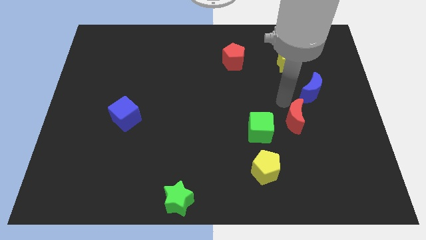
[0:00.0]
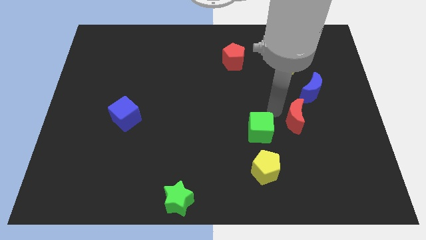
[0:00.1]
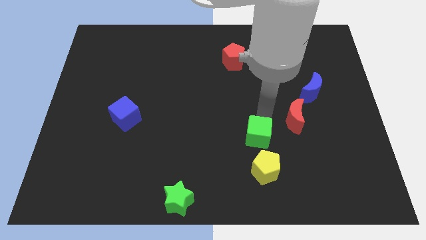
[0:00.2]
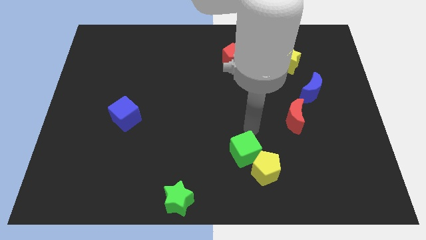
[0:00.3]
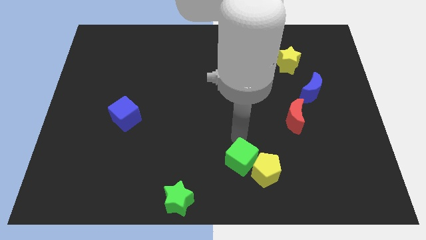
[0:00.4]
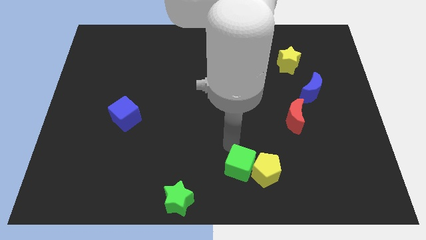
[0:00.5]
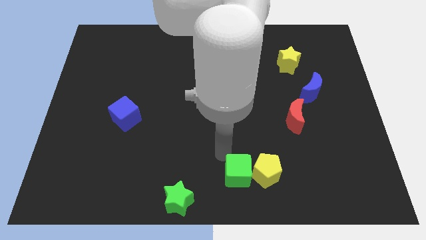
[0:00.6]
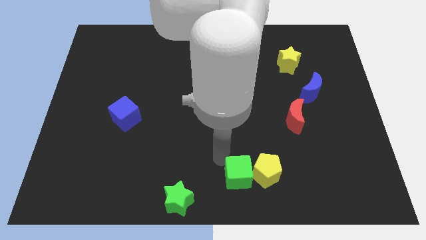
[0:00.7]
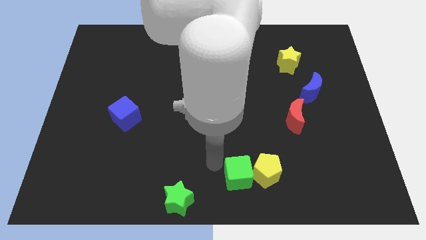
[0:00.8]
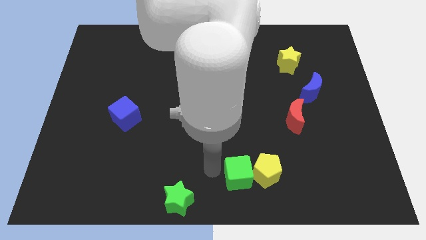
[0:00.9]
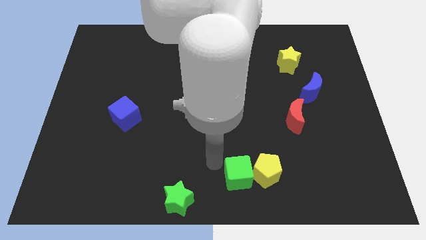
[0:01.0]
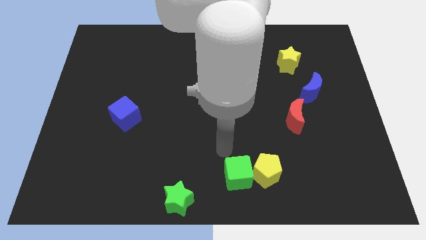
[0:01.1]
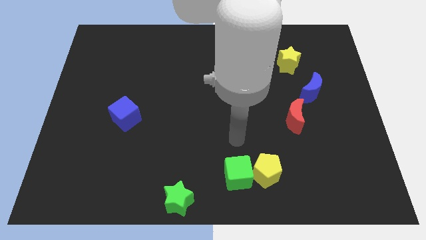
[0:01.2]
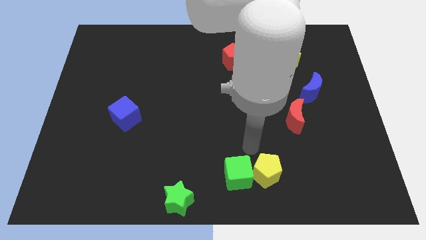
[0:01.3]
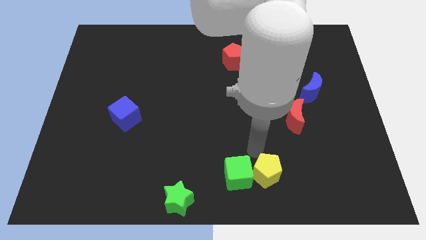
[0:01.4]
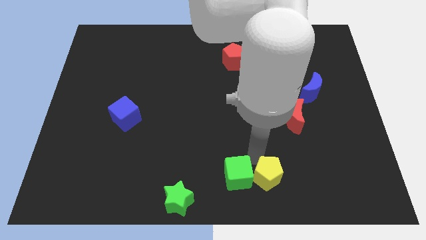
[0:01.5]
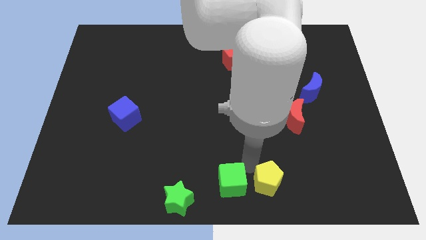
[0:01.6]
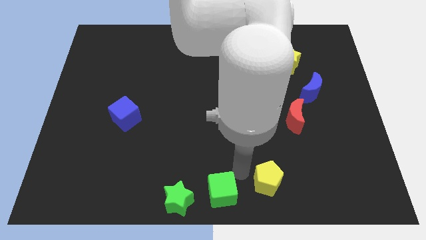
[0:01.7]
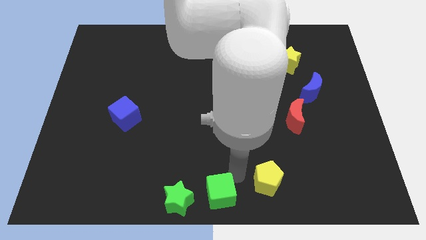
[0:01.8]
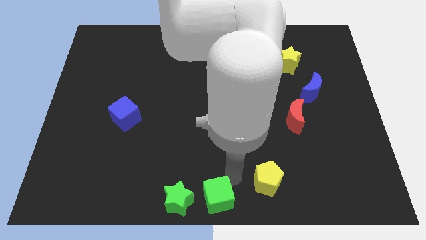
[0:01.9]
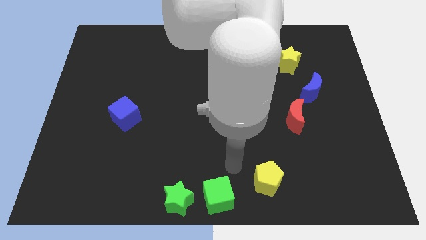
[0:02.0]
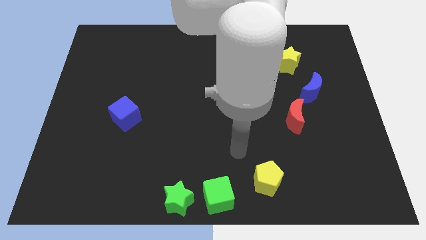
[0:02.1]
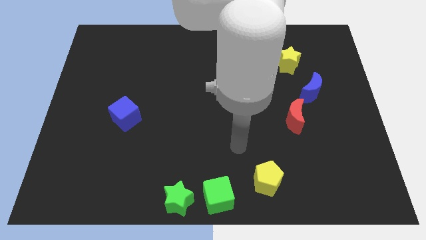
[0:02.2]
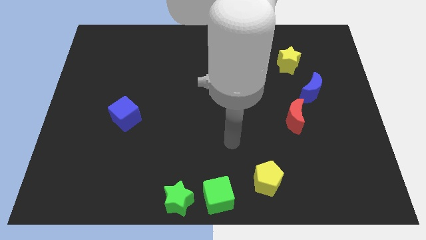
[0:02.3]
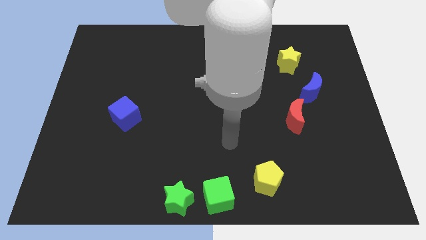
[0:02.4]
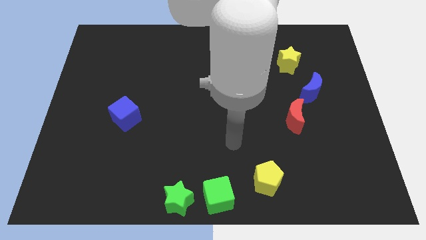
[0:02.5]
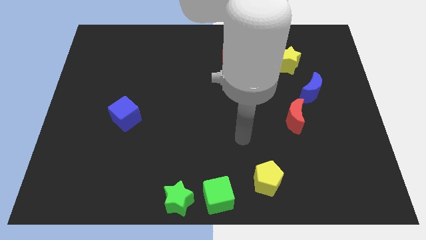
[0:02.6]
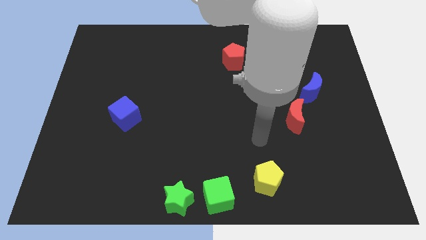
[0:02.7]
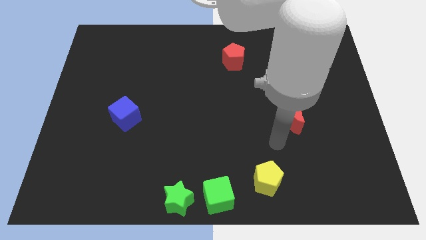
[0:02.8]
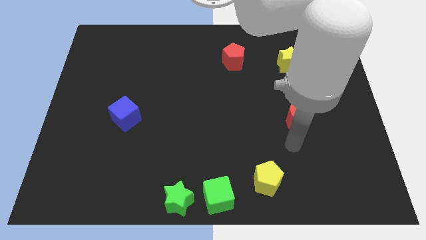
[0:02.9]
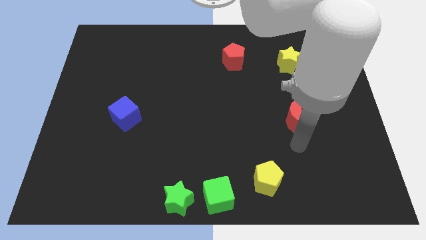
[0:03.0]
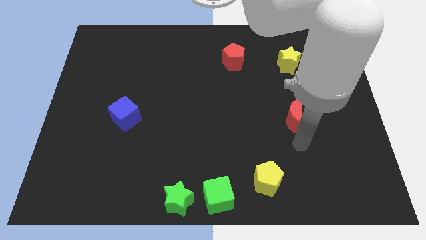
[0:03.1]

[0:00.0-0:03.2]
place the green cube to the right of the green star

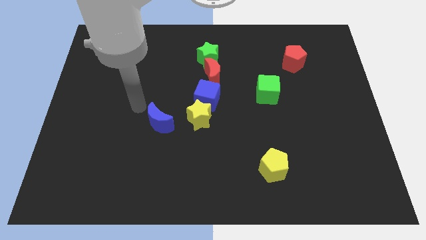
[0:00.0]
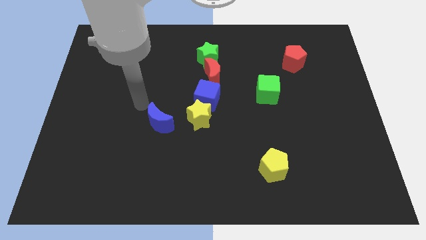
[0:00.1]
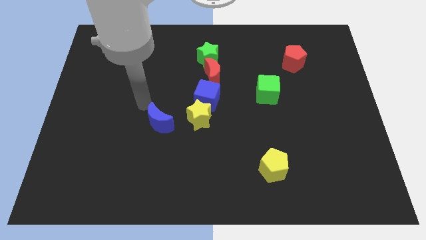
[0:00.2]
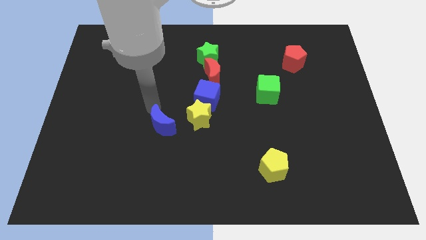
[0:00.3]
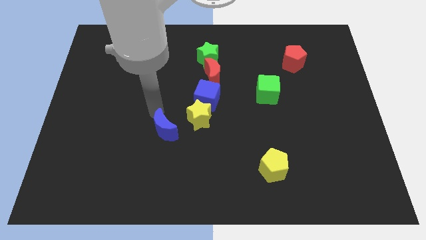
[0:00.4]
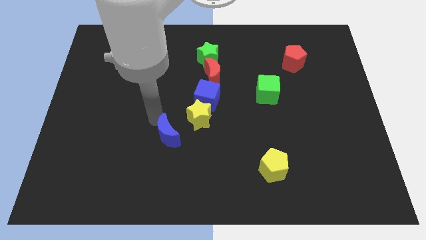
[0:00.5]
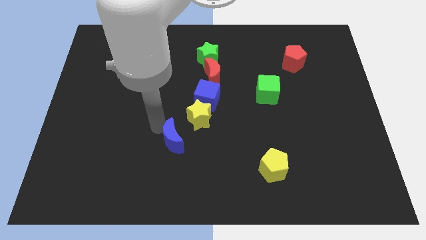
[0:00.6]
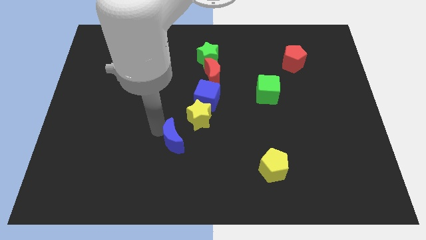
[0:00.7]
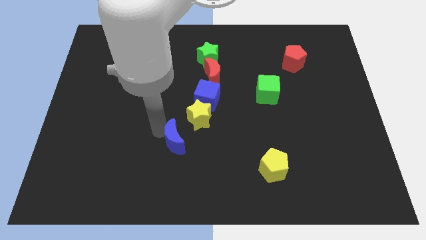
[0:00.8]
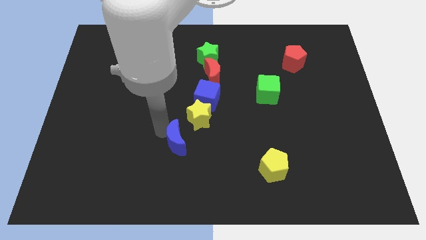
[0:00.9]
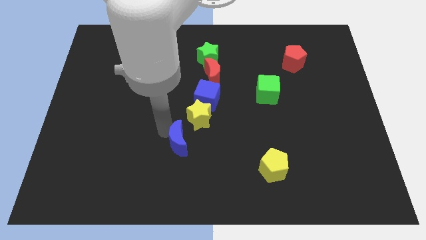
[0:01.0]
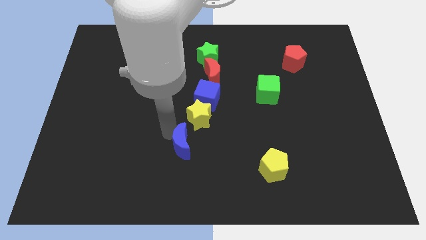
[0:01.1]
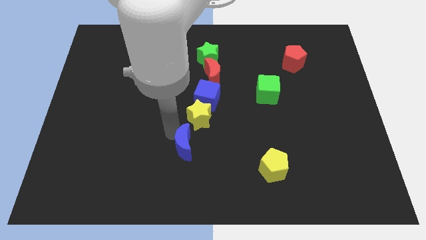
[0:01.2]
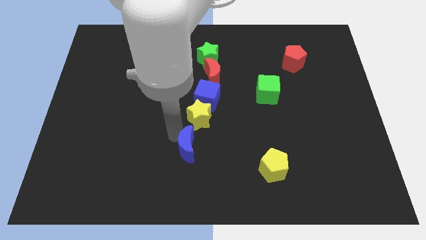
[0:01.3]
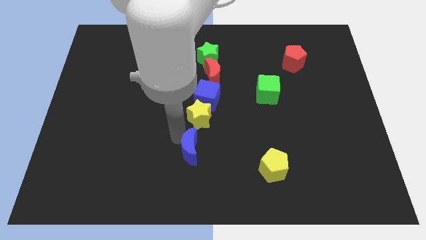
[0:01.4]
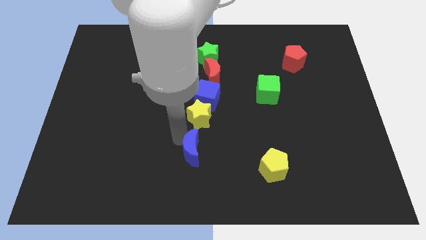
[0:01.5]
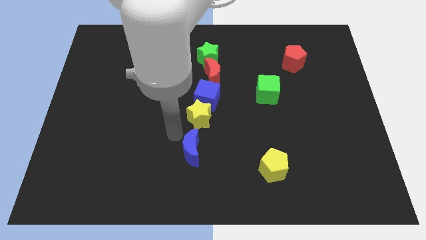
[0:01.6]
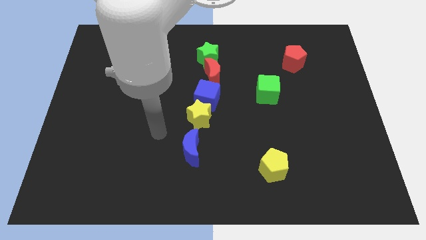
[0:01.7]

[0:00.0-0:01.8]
move the blue moon below the yellow star

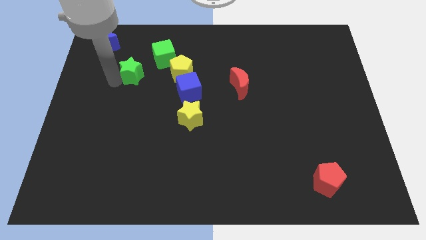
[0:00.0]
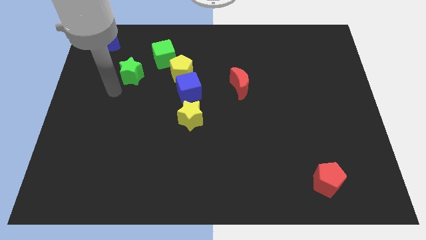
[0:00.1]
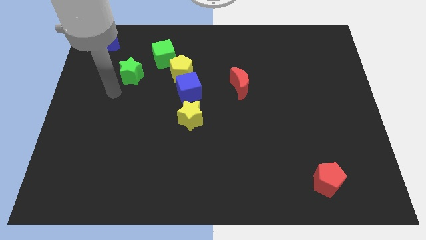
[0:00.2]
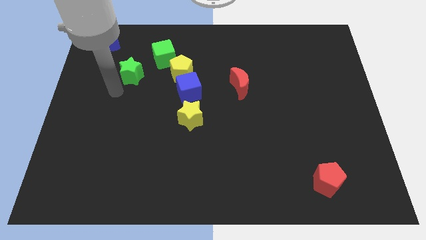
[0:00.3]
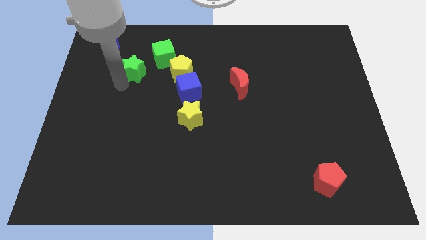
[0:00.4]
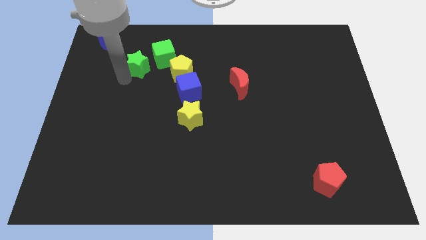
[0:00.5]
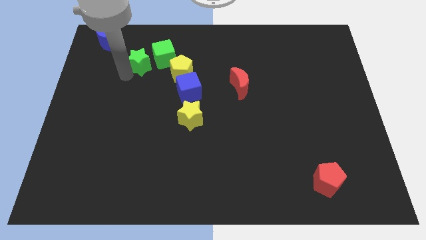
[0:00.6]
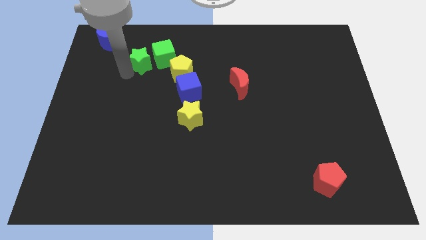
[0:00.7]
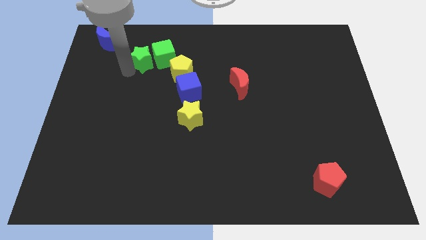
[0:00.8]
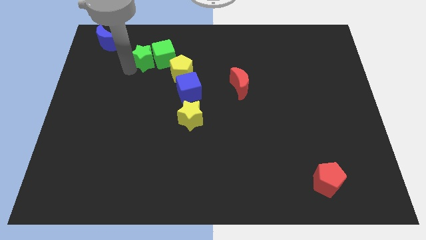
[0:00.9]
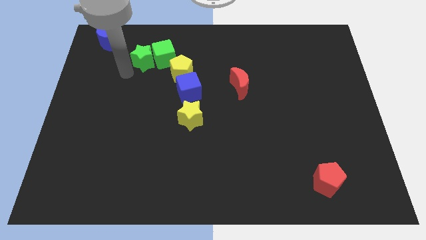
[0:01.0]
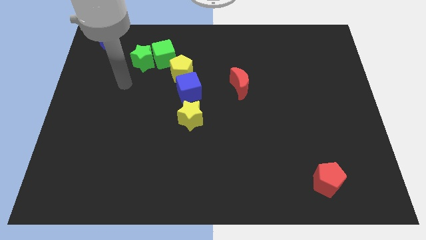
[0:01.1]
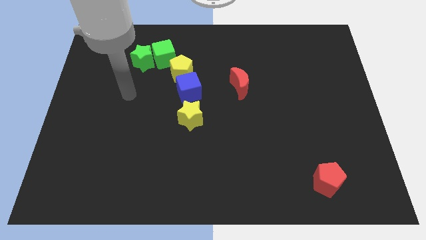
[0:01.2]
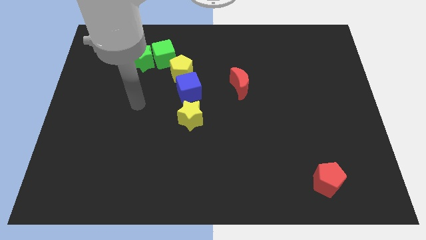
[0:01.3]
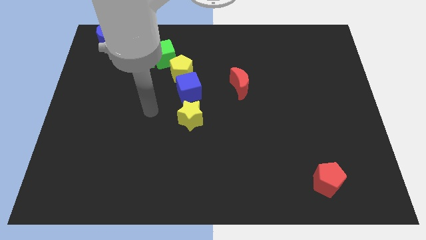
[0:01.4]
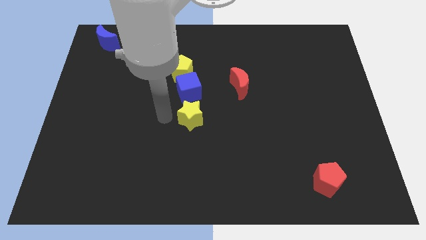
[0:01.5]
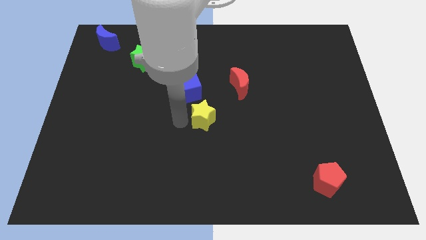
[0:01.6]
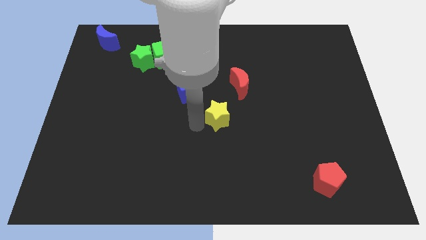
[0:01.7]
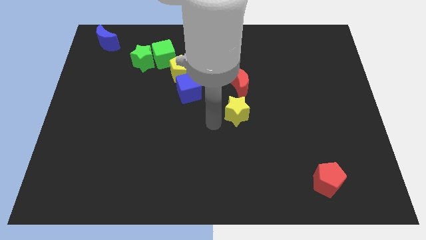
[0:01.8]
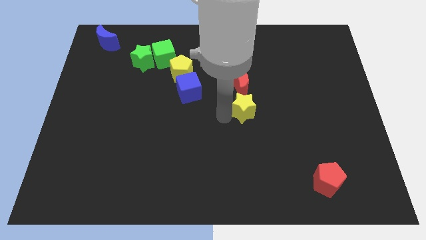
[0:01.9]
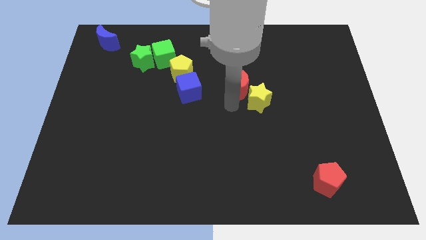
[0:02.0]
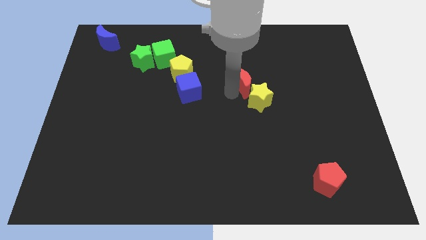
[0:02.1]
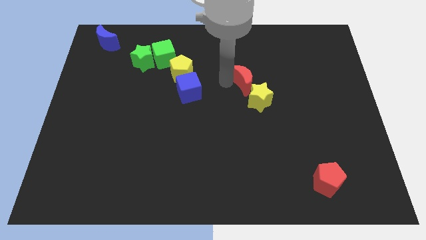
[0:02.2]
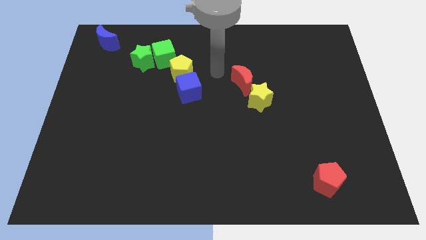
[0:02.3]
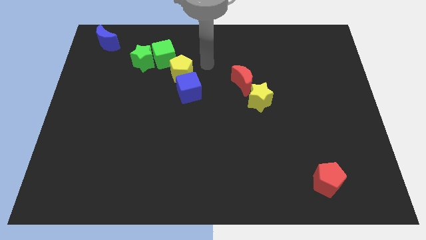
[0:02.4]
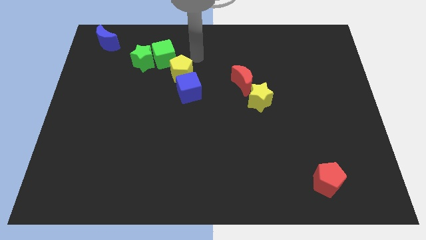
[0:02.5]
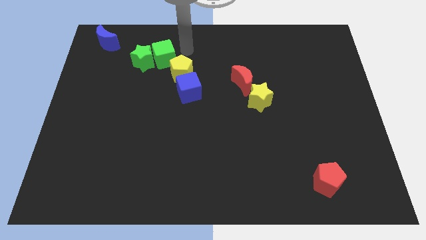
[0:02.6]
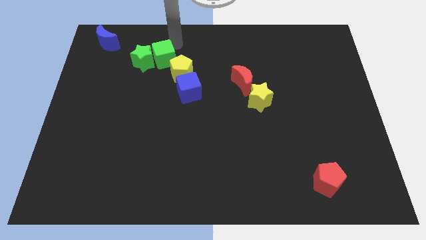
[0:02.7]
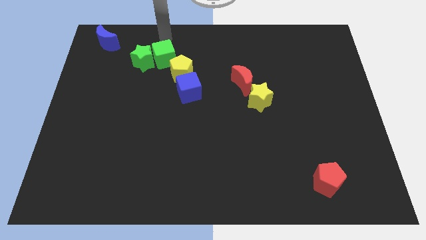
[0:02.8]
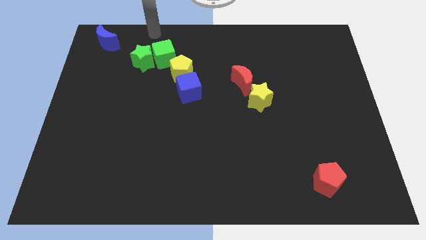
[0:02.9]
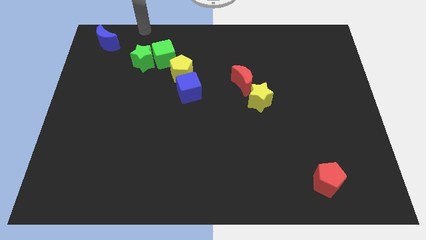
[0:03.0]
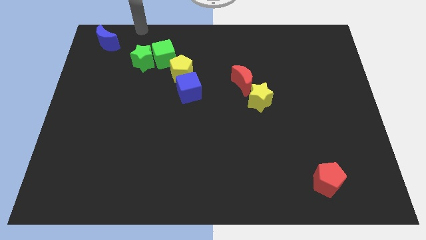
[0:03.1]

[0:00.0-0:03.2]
separate yellow star from blue cube

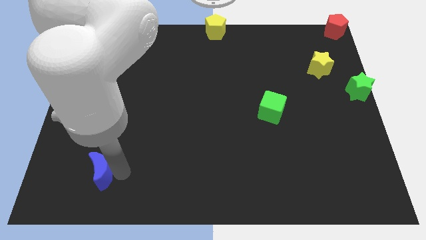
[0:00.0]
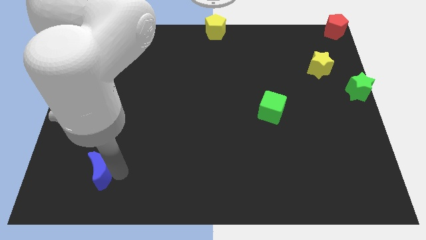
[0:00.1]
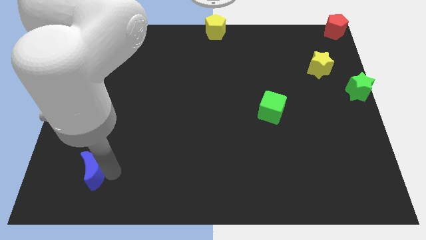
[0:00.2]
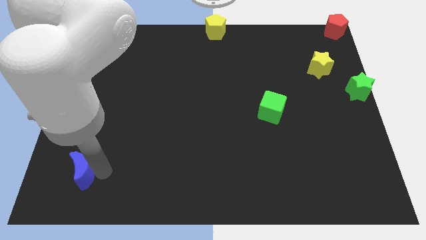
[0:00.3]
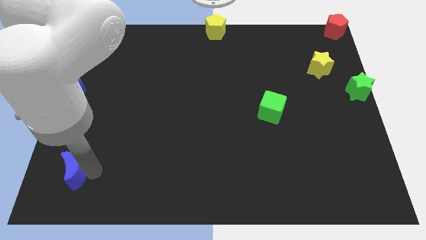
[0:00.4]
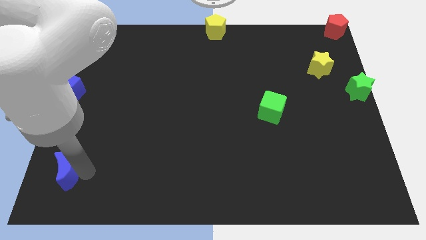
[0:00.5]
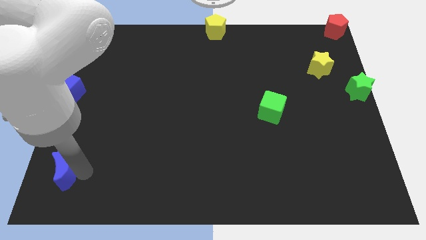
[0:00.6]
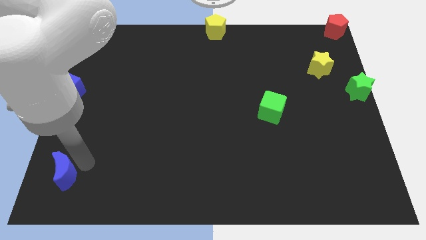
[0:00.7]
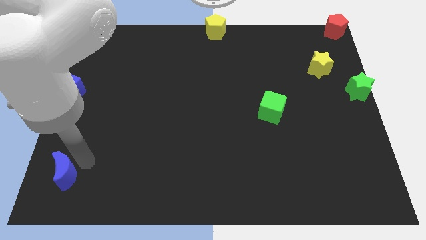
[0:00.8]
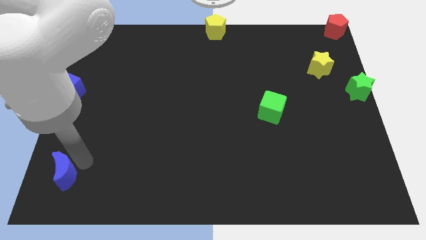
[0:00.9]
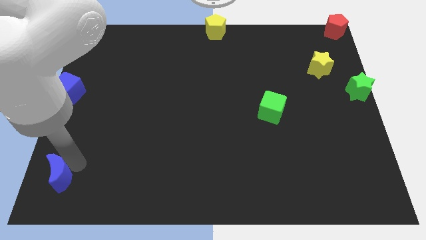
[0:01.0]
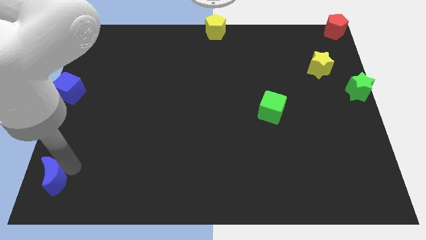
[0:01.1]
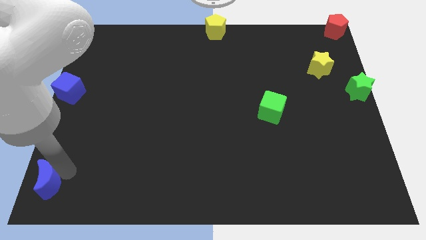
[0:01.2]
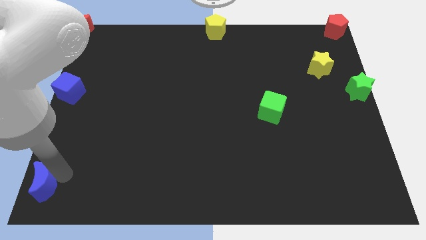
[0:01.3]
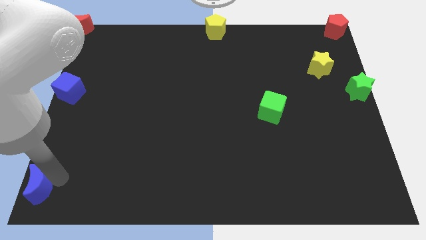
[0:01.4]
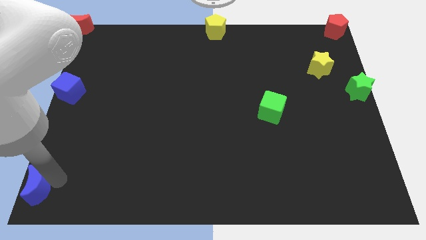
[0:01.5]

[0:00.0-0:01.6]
move the blue crescent to the bottom left to the board
